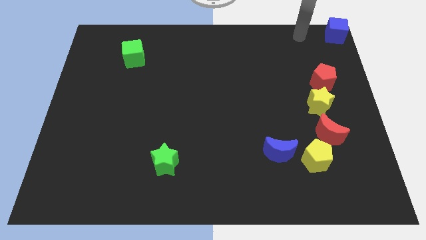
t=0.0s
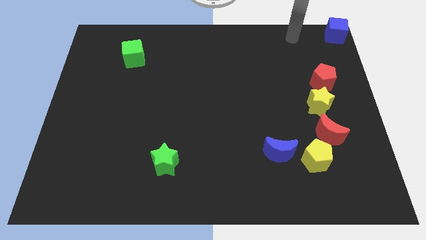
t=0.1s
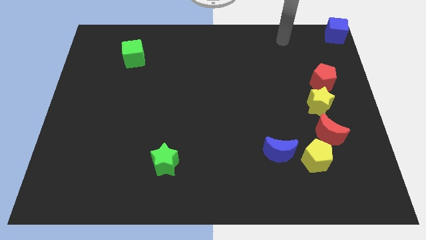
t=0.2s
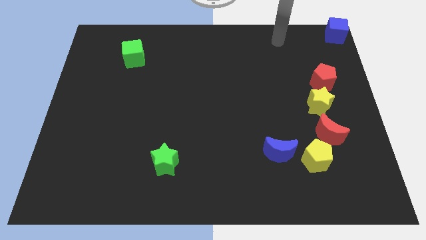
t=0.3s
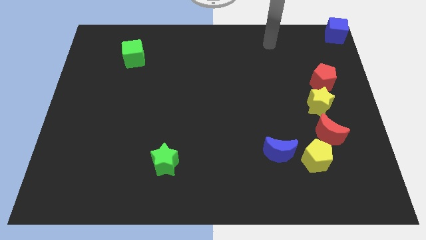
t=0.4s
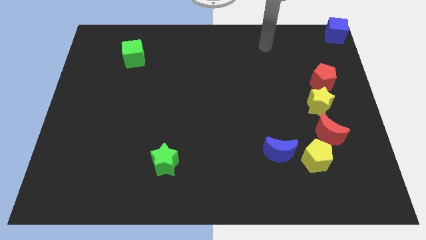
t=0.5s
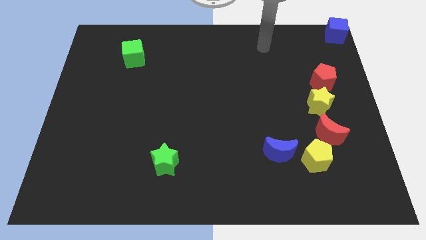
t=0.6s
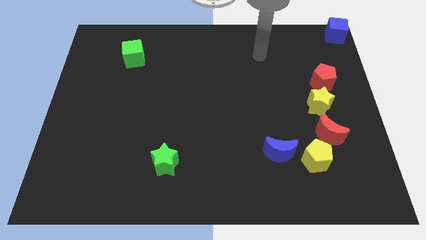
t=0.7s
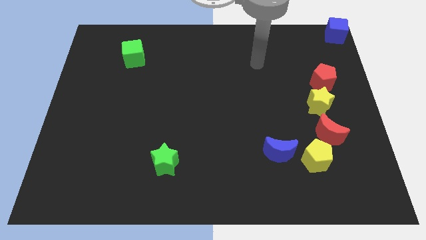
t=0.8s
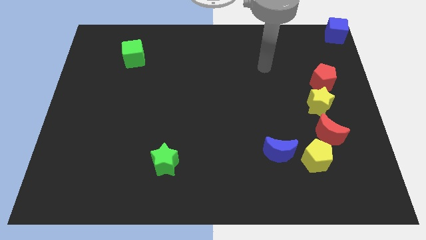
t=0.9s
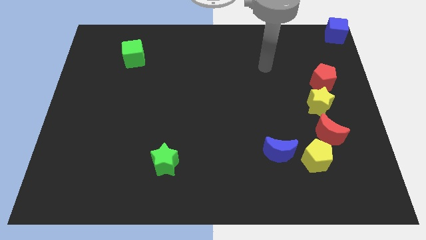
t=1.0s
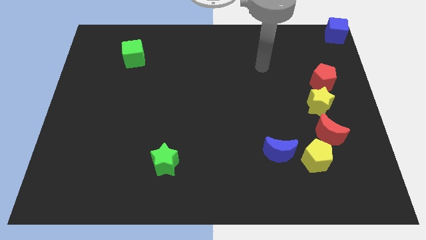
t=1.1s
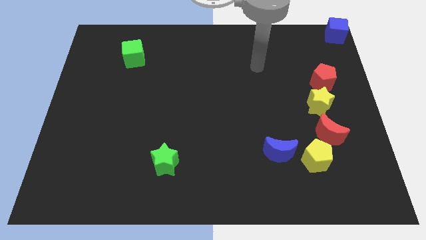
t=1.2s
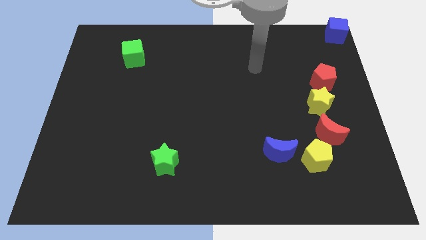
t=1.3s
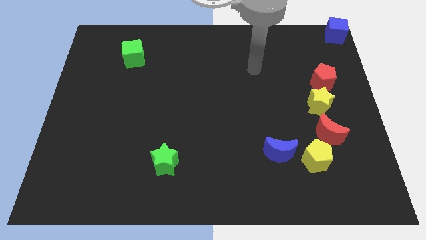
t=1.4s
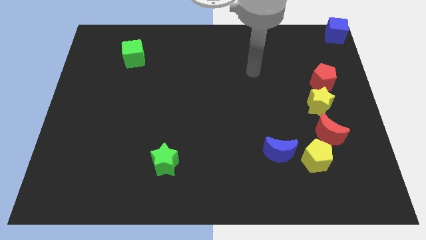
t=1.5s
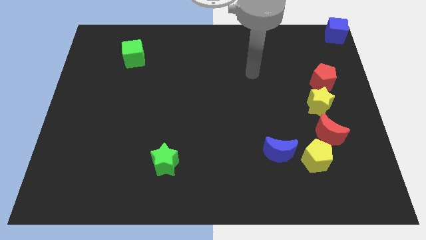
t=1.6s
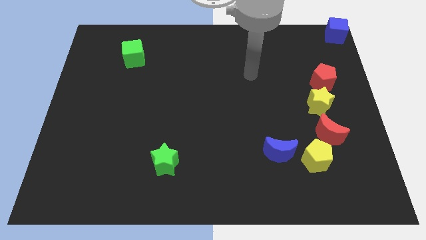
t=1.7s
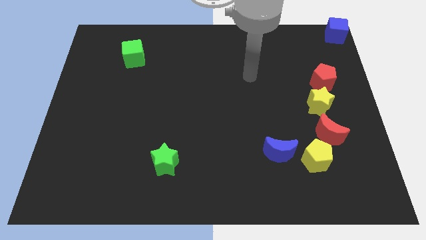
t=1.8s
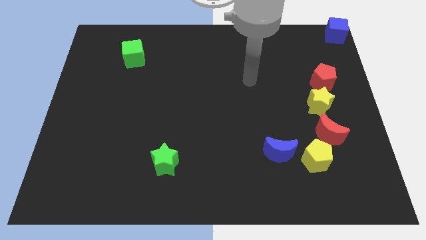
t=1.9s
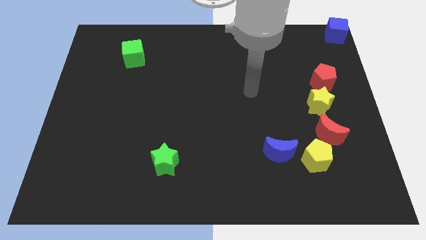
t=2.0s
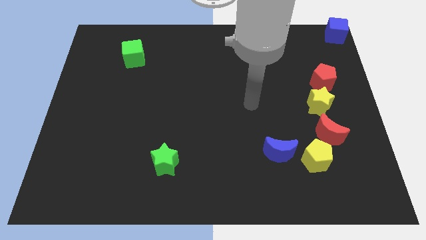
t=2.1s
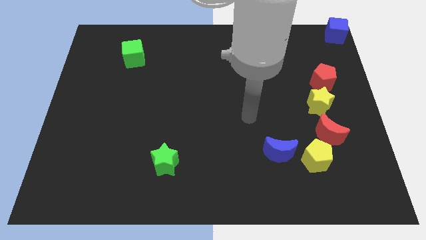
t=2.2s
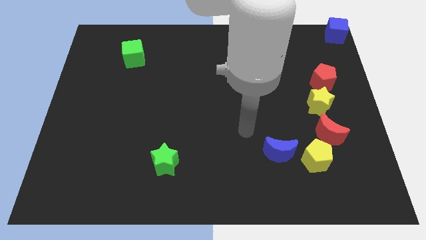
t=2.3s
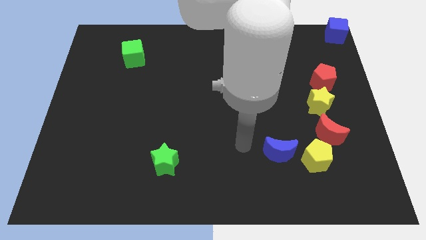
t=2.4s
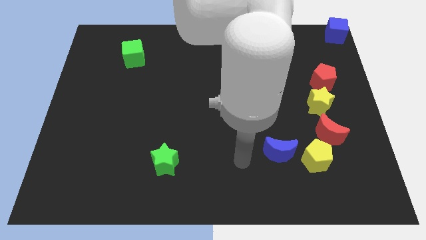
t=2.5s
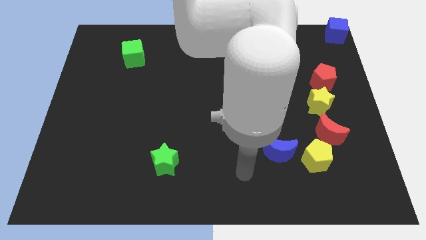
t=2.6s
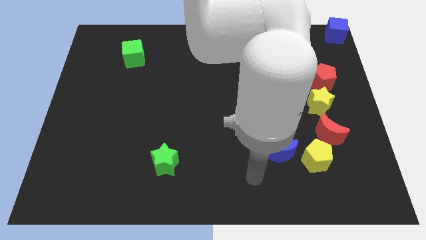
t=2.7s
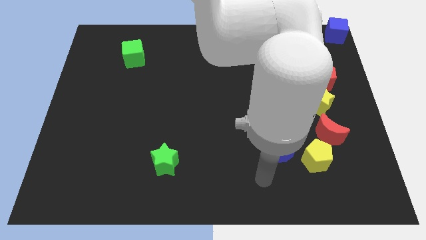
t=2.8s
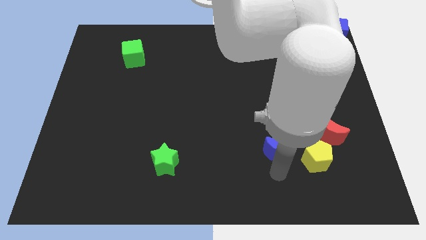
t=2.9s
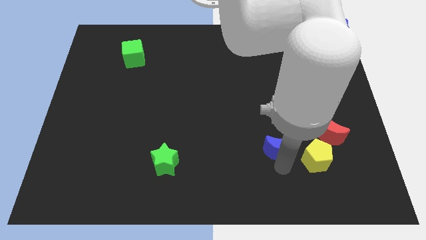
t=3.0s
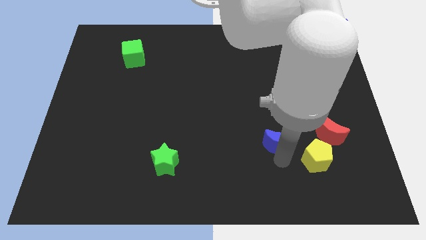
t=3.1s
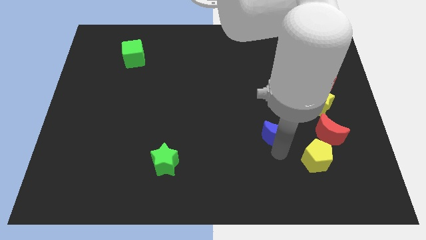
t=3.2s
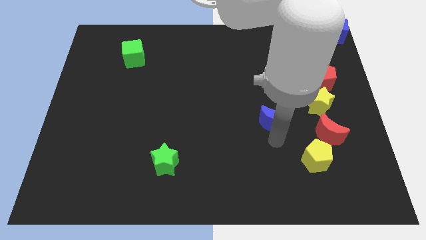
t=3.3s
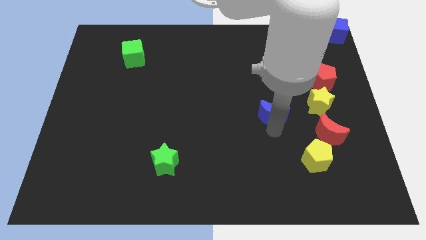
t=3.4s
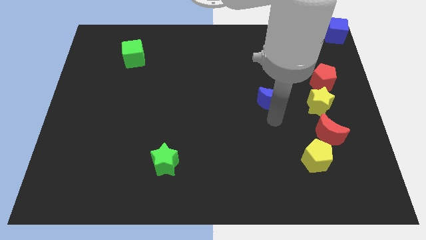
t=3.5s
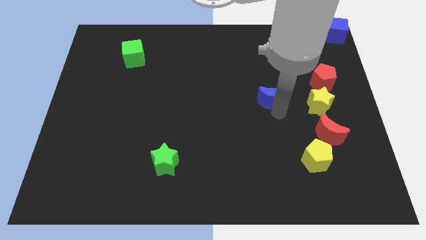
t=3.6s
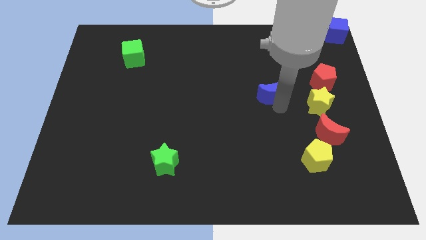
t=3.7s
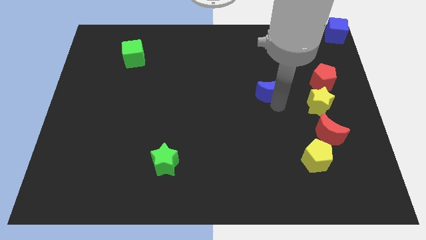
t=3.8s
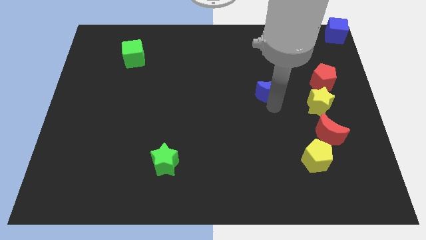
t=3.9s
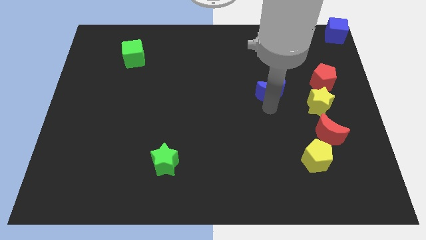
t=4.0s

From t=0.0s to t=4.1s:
move the blue crescent to the top of the board

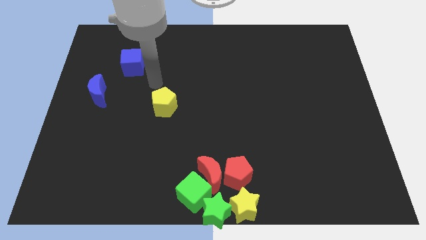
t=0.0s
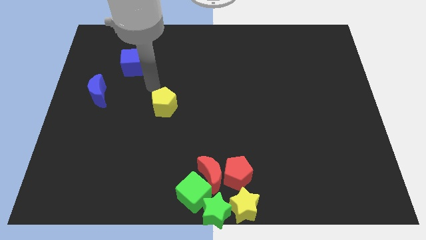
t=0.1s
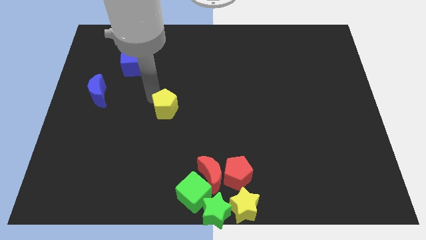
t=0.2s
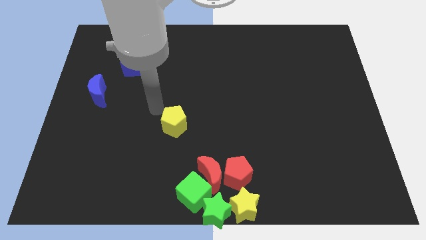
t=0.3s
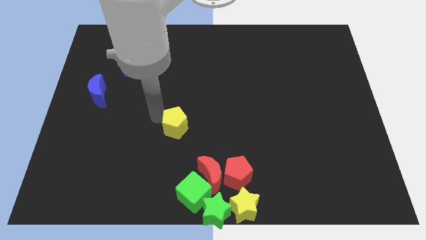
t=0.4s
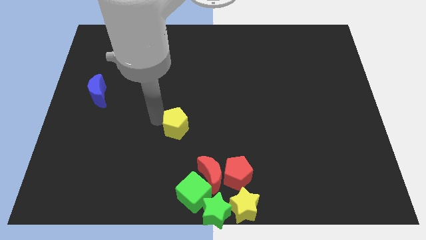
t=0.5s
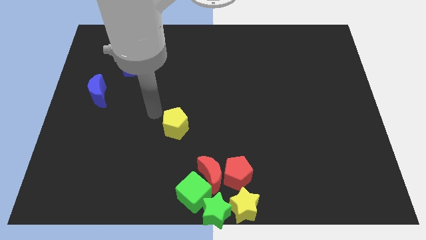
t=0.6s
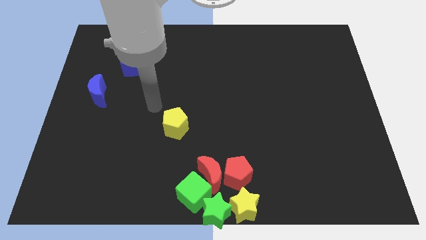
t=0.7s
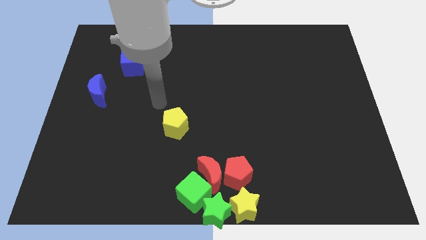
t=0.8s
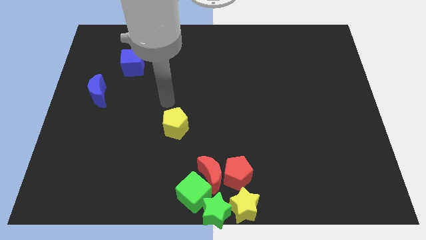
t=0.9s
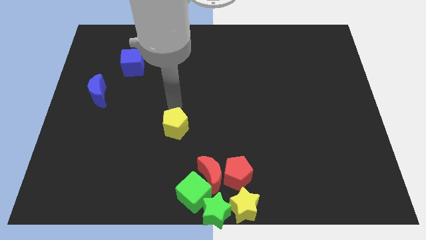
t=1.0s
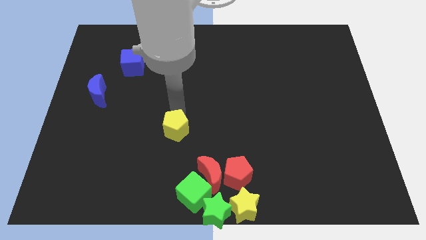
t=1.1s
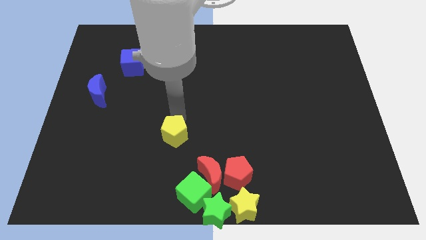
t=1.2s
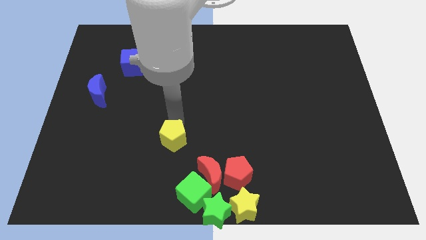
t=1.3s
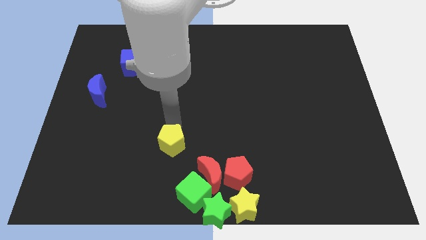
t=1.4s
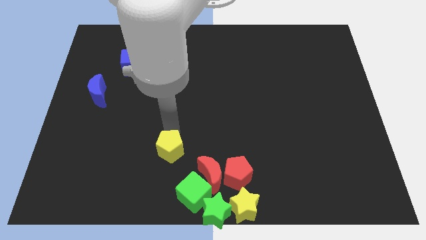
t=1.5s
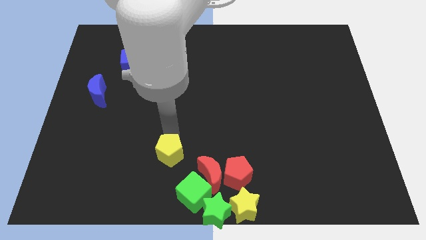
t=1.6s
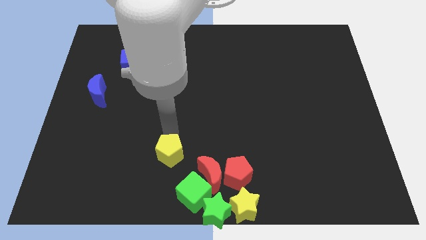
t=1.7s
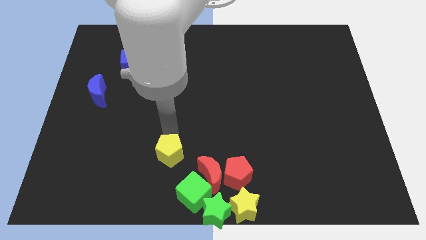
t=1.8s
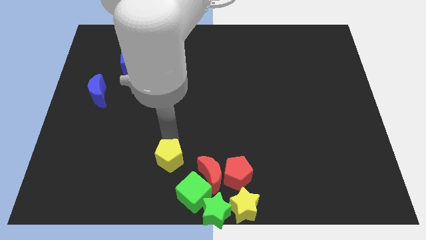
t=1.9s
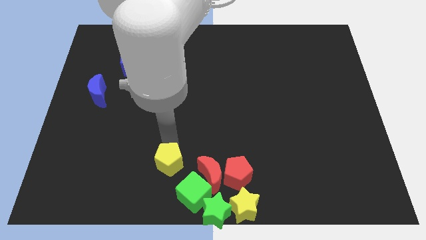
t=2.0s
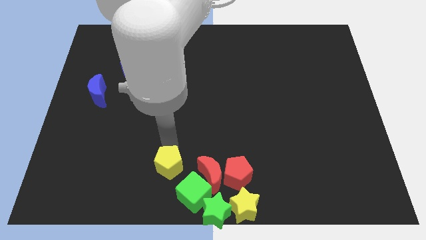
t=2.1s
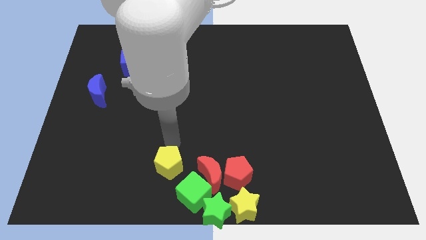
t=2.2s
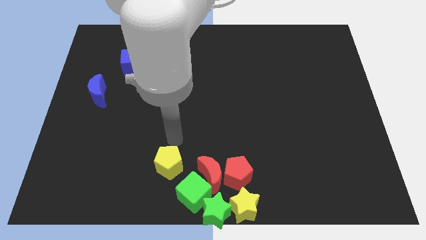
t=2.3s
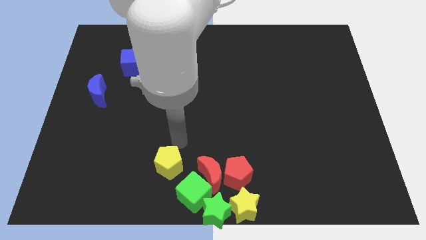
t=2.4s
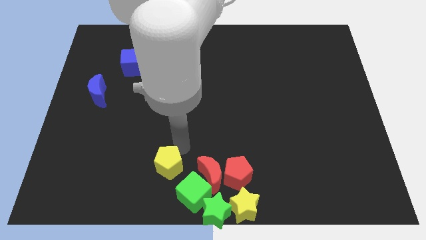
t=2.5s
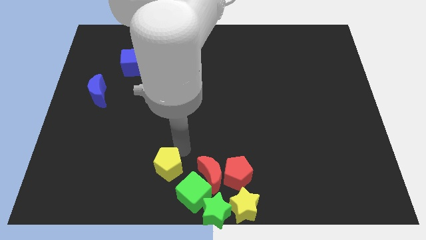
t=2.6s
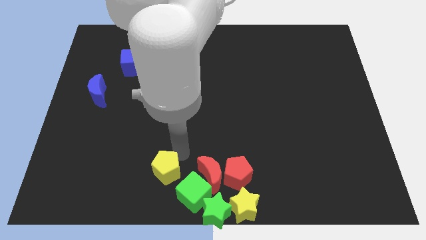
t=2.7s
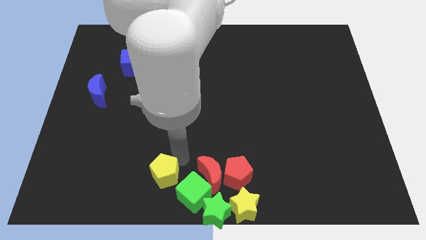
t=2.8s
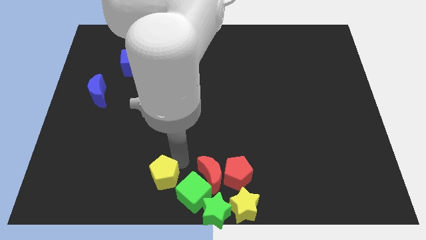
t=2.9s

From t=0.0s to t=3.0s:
move the yellow pentagon to the left of the red crescent

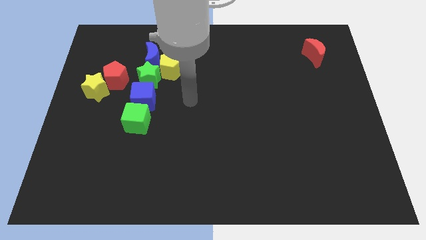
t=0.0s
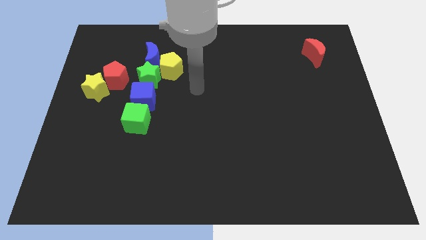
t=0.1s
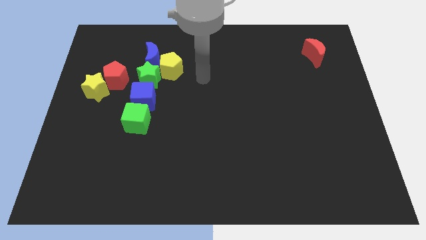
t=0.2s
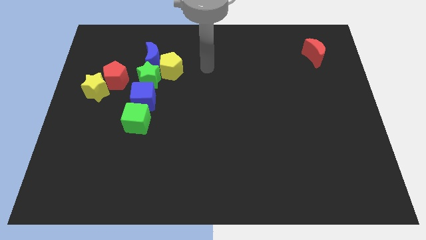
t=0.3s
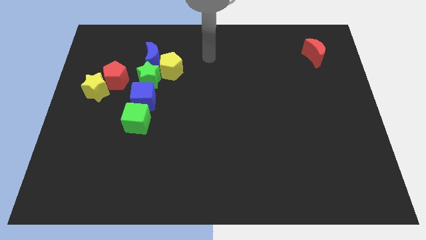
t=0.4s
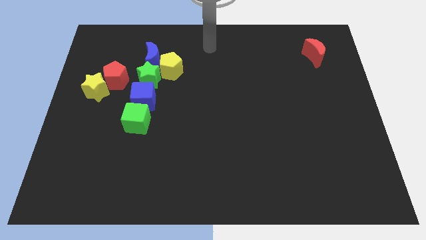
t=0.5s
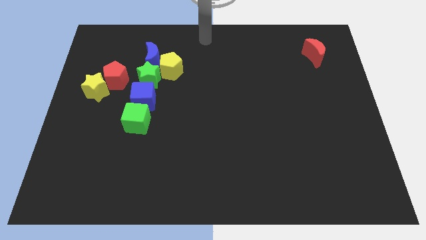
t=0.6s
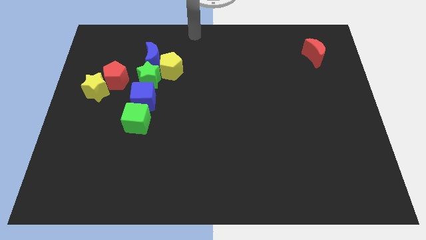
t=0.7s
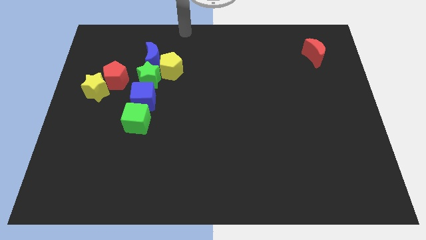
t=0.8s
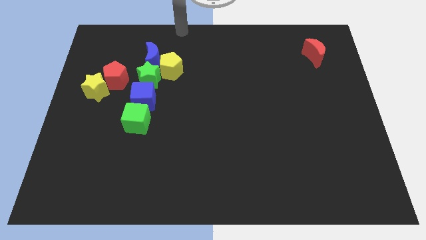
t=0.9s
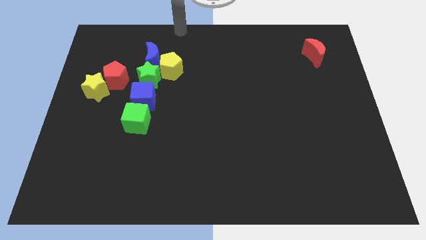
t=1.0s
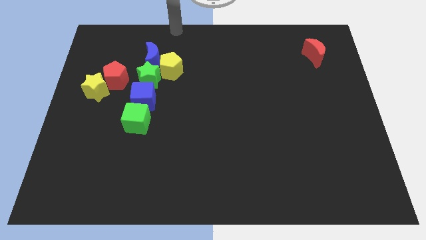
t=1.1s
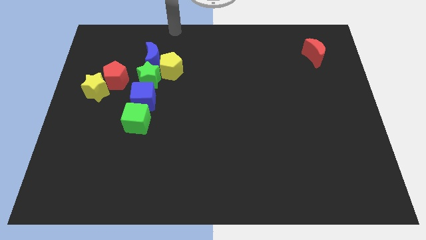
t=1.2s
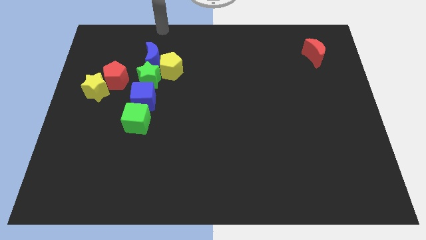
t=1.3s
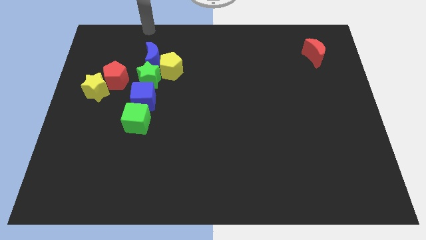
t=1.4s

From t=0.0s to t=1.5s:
point your arm at the top side of the blue moon

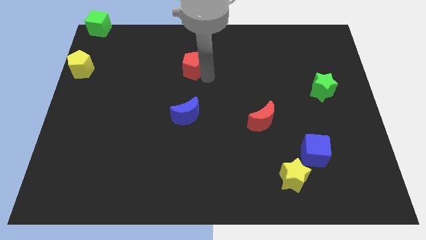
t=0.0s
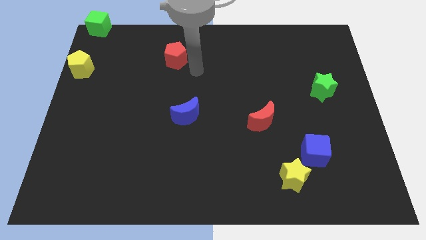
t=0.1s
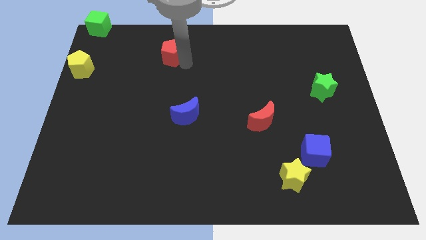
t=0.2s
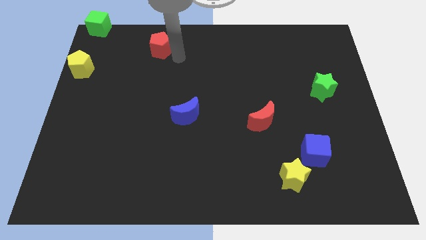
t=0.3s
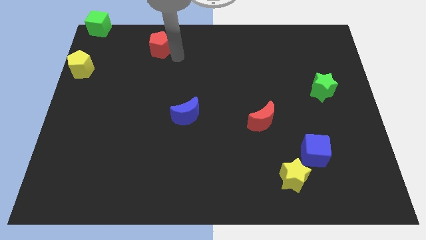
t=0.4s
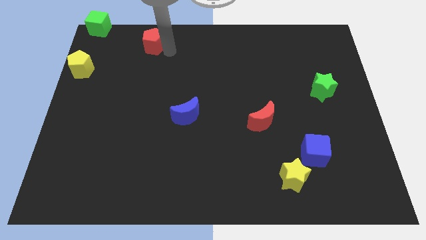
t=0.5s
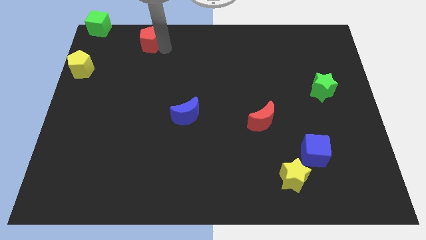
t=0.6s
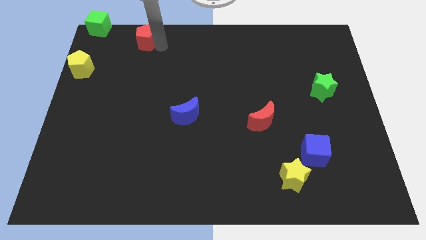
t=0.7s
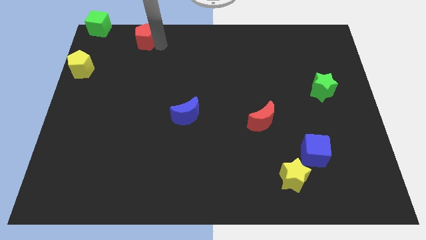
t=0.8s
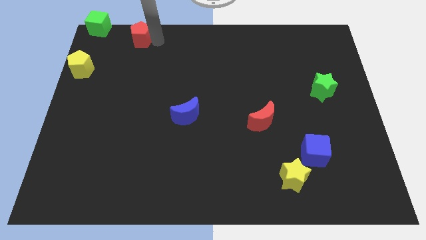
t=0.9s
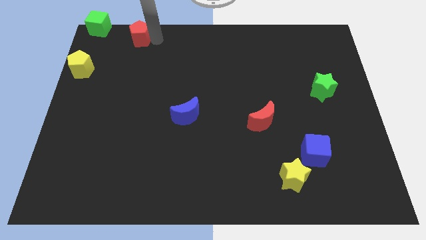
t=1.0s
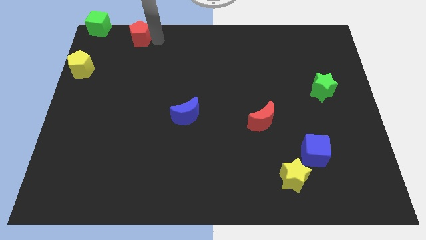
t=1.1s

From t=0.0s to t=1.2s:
push the red pentagon towards the top left corner of the board
